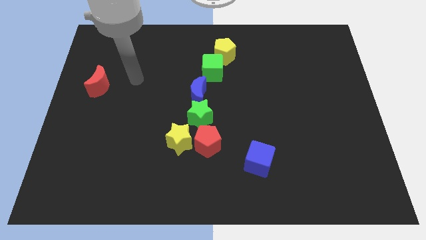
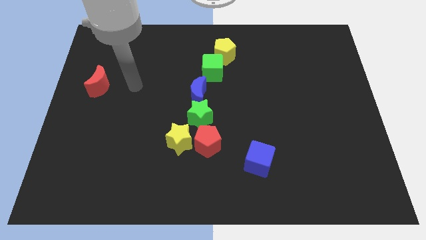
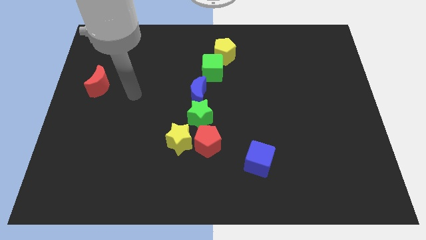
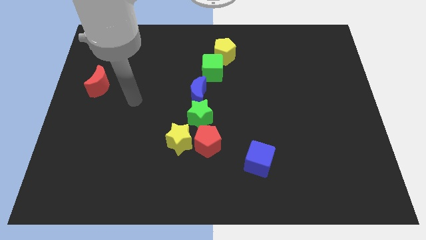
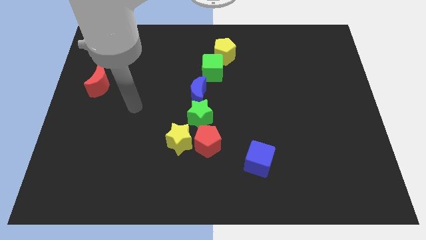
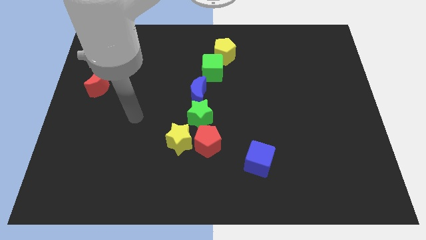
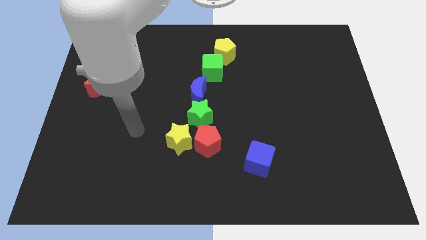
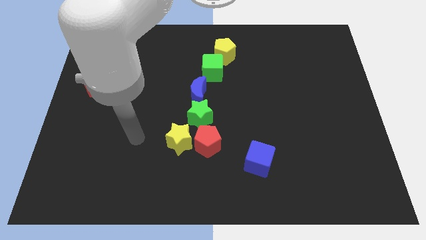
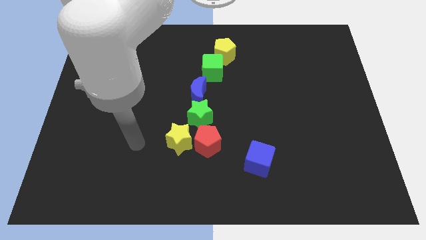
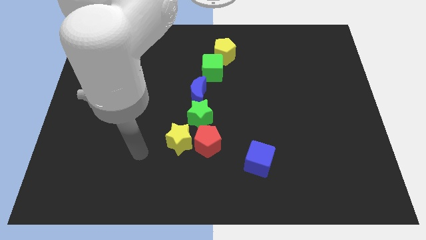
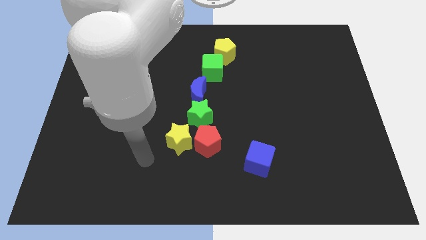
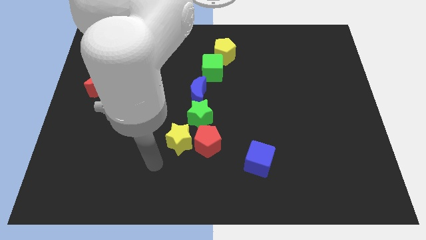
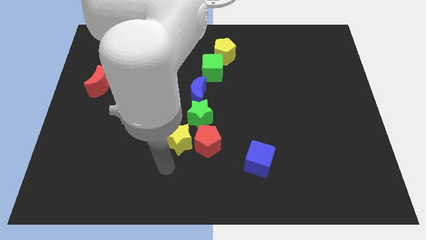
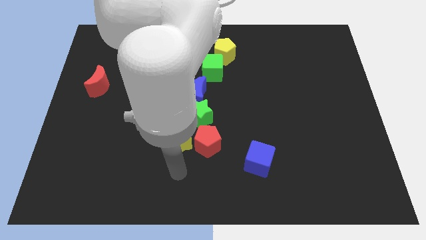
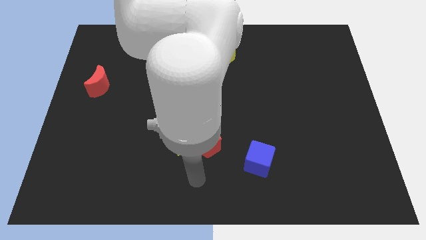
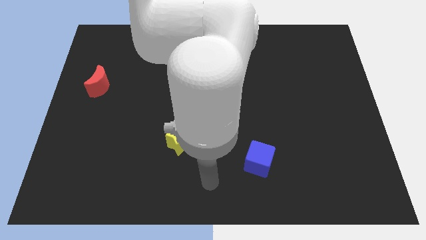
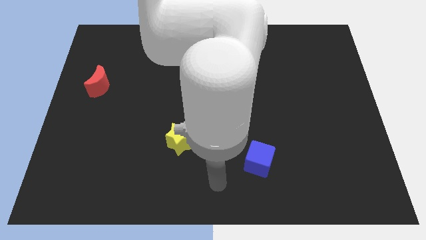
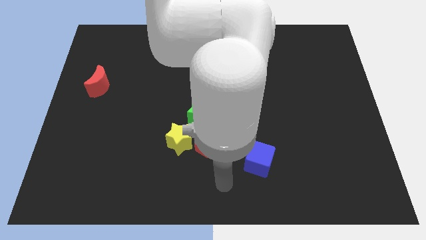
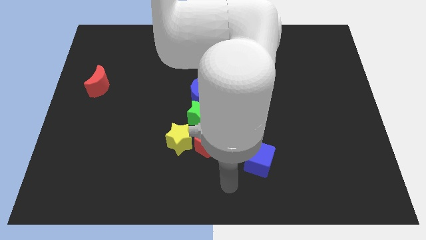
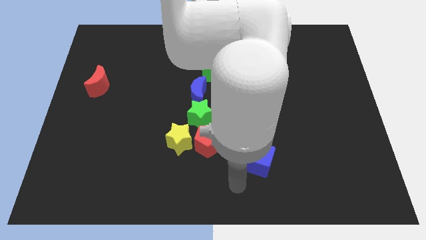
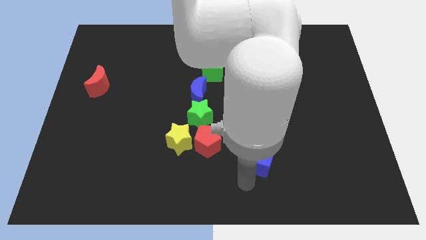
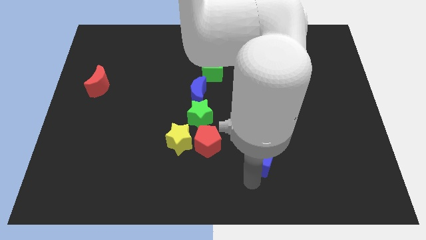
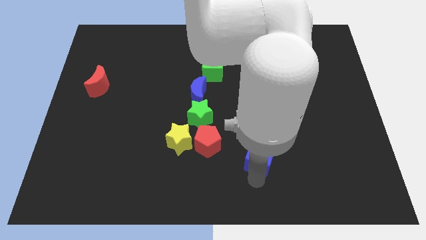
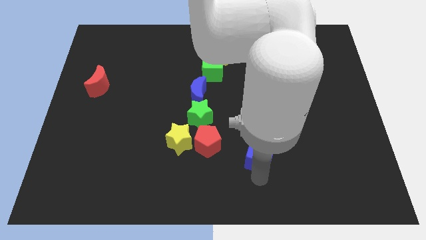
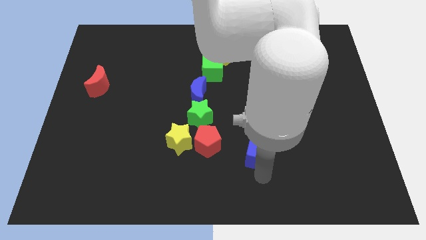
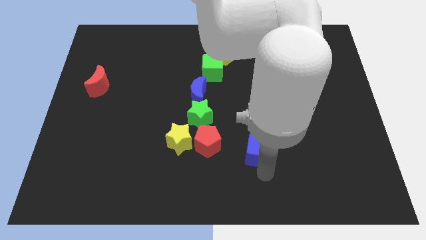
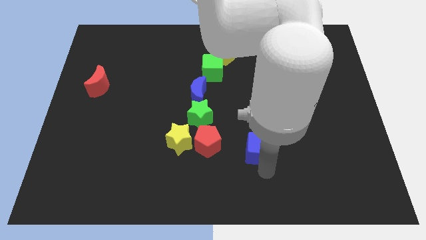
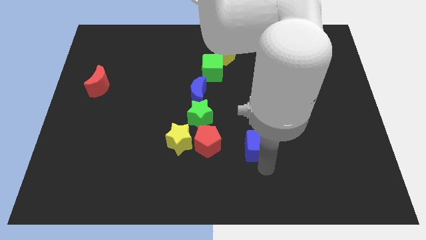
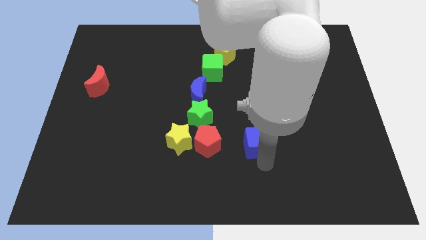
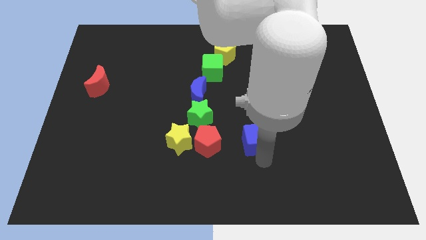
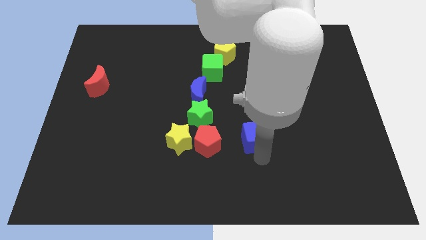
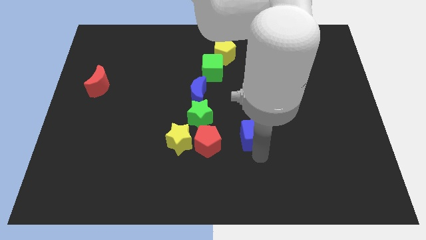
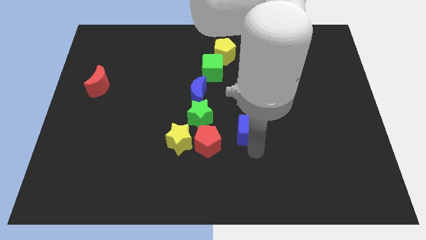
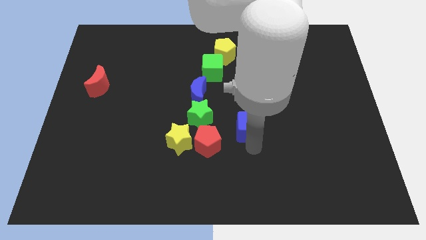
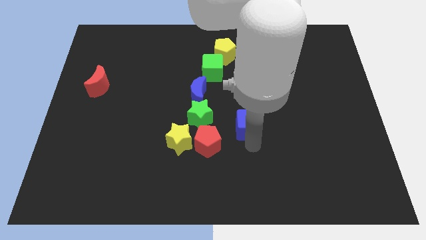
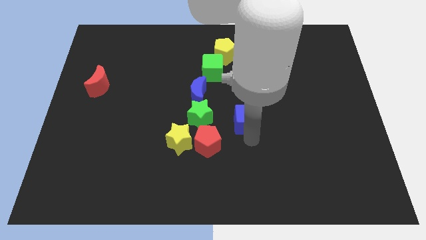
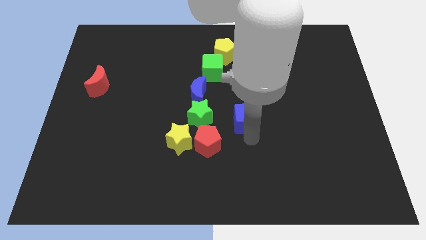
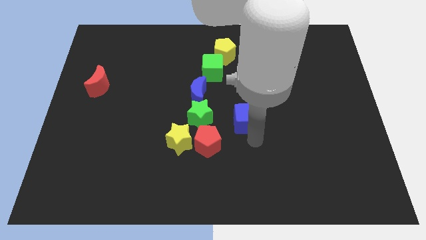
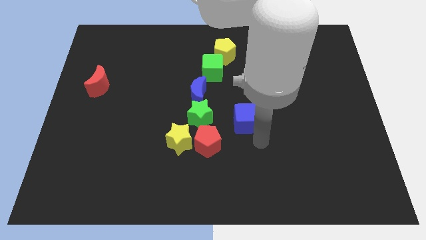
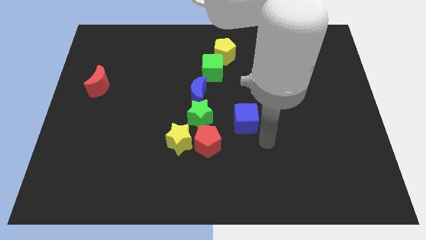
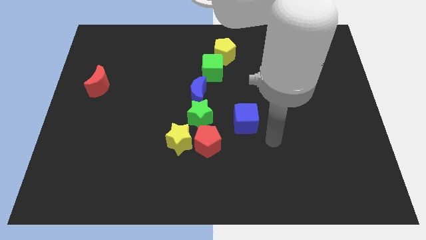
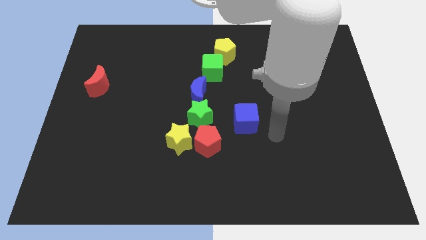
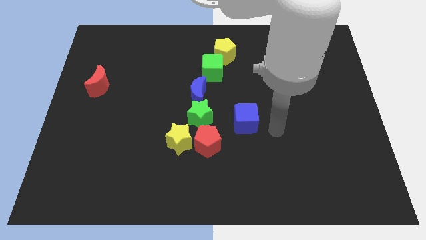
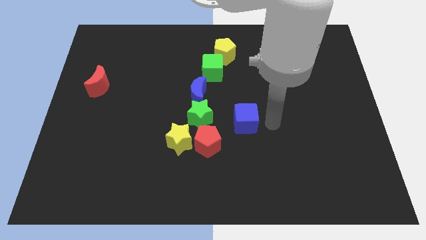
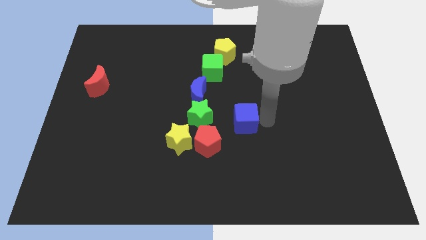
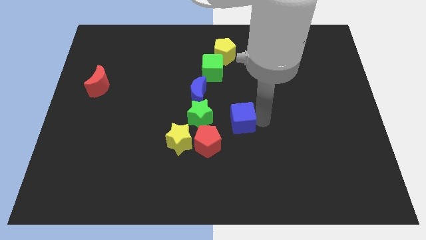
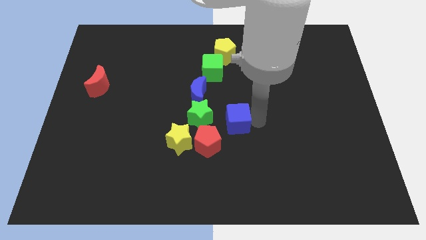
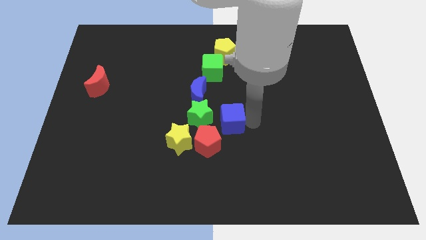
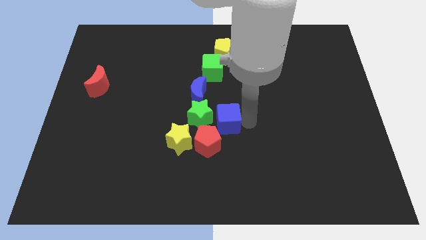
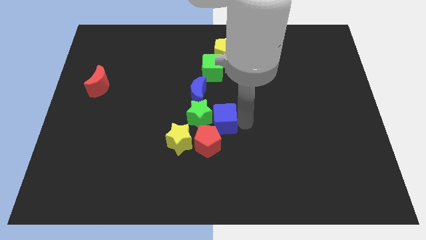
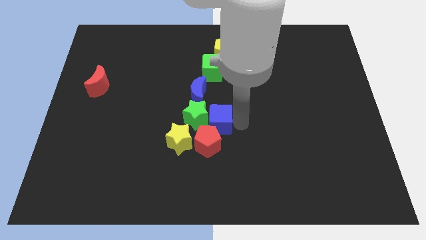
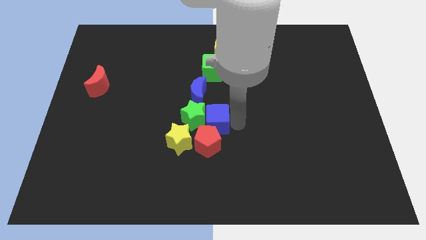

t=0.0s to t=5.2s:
slide the blue cube to the green star

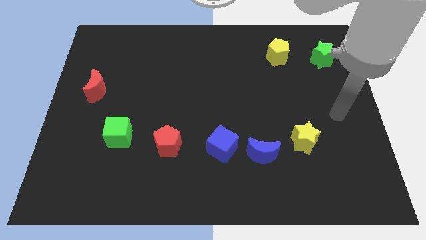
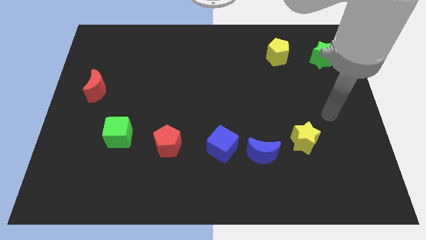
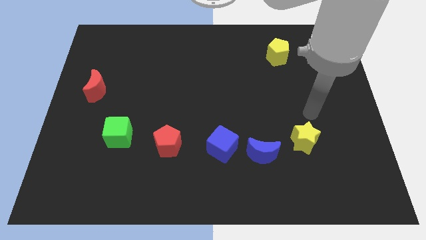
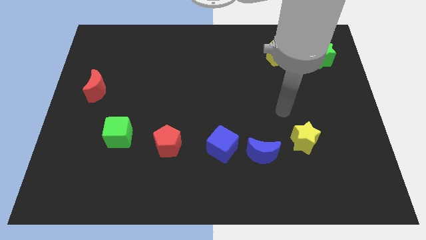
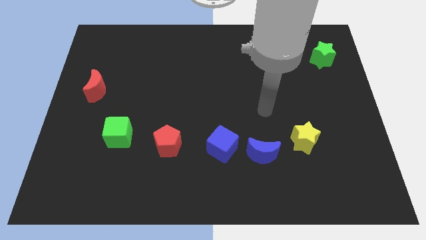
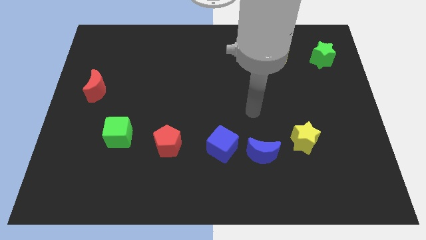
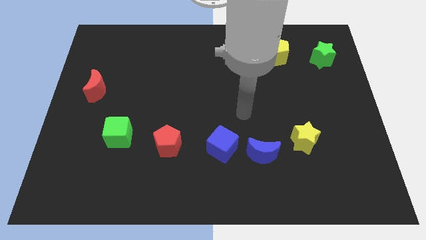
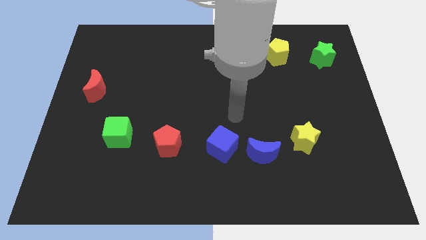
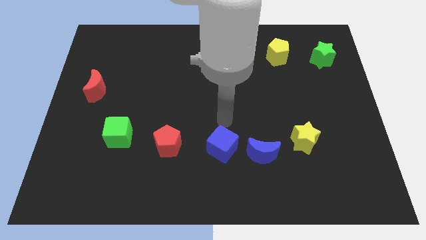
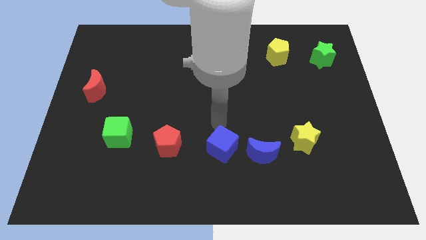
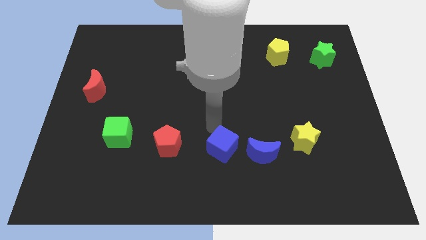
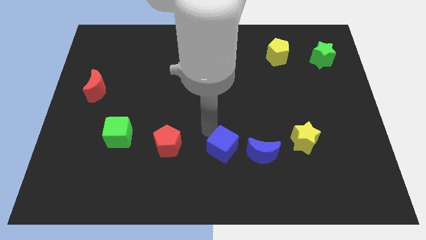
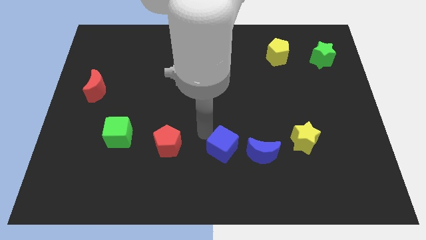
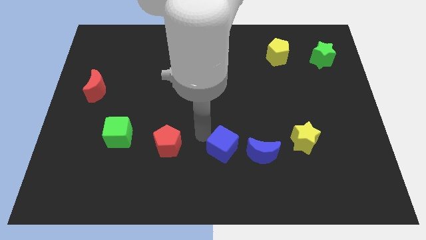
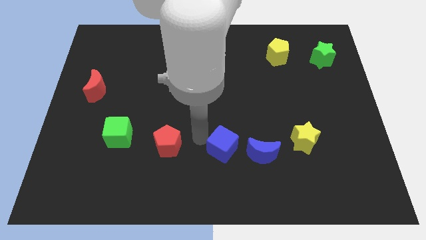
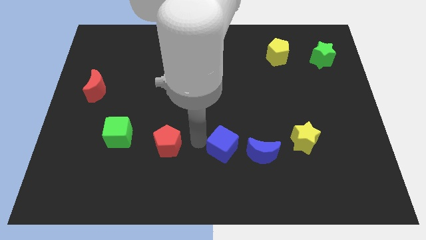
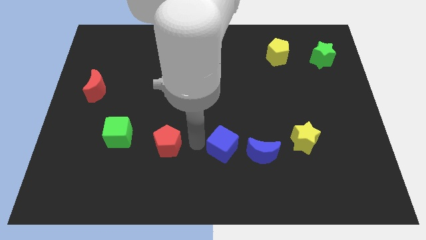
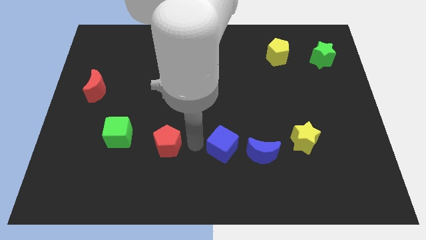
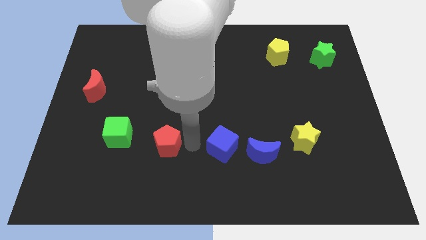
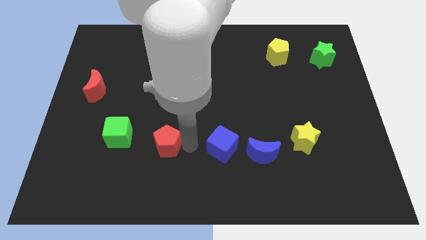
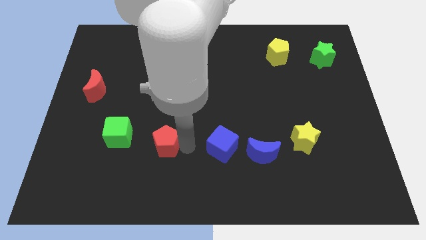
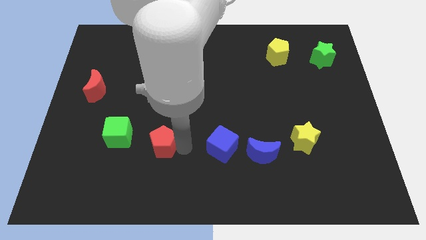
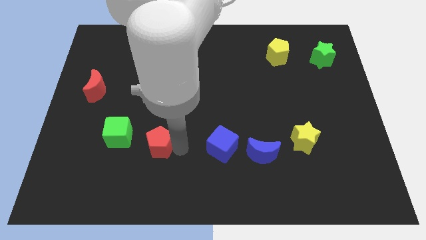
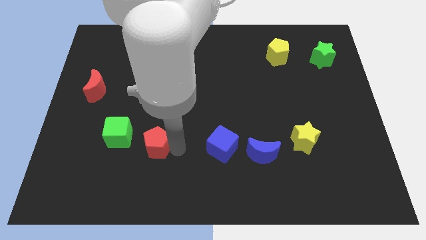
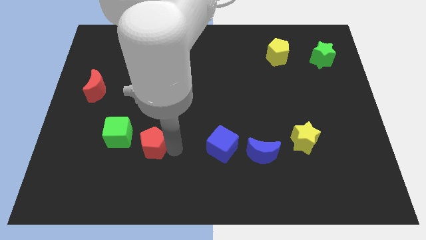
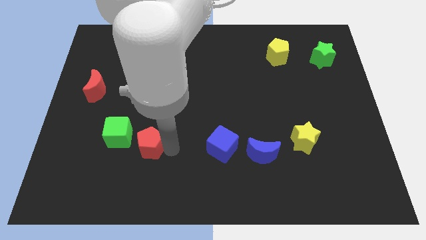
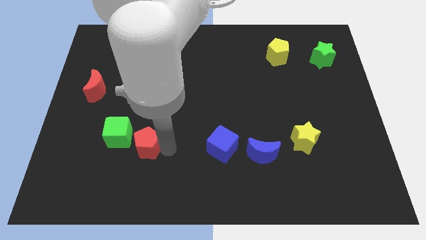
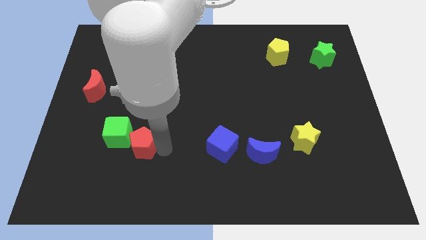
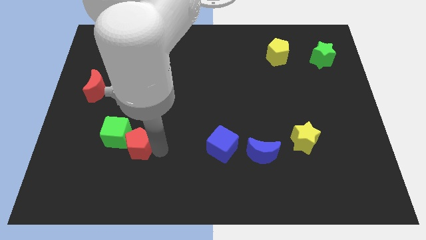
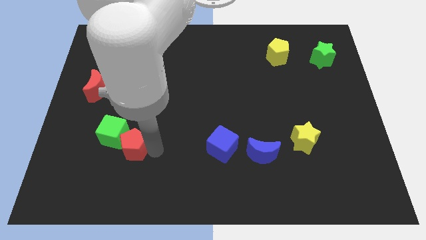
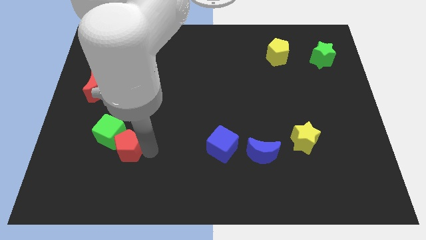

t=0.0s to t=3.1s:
push the red pentagon towards the green cube
